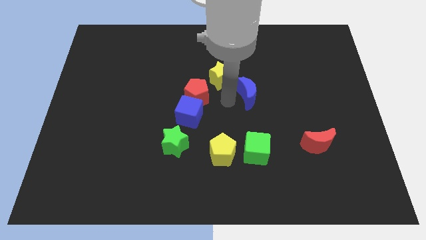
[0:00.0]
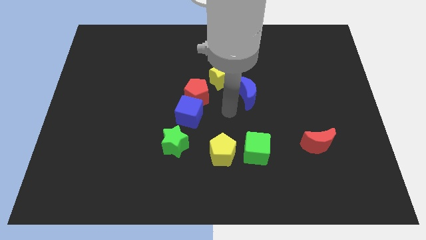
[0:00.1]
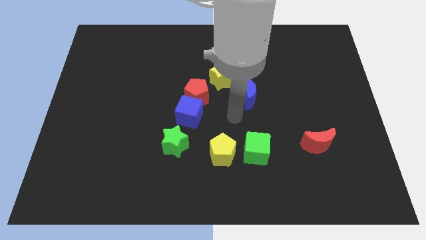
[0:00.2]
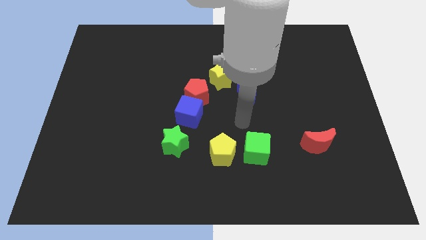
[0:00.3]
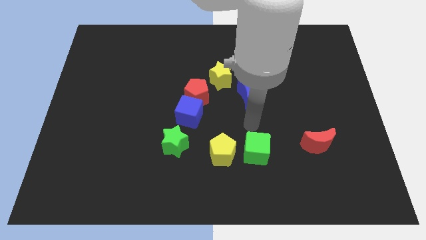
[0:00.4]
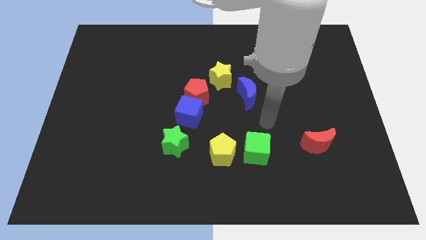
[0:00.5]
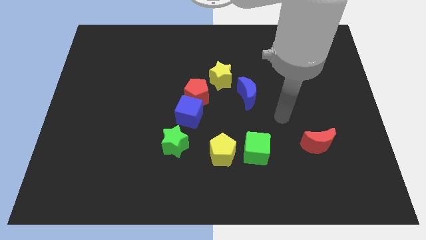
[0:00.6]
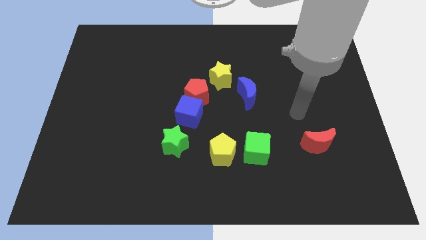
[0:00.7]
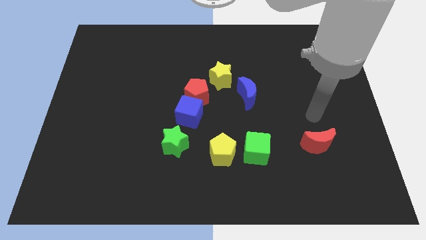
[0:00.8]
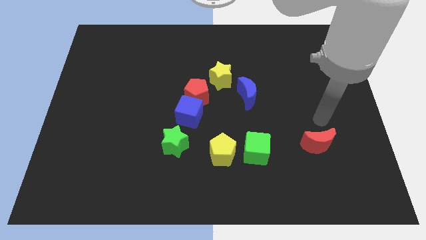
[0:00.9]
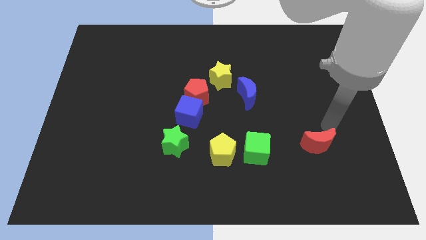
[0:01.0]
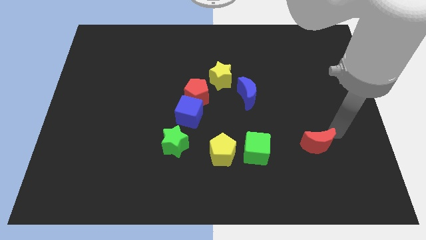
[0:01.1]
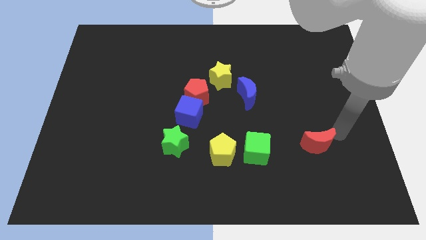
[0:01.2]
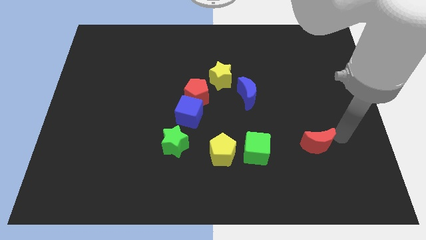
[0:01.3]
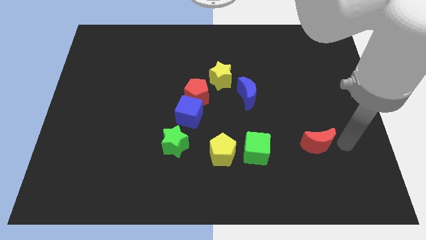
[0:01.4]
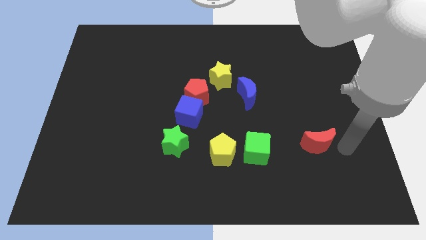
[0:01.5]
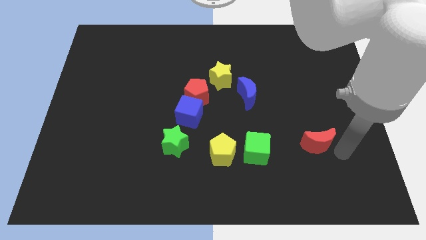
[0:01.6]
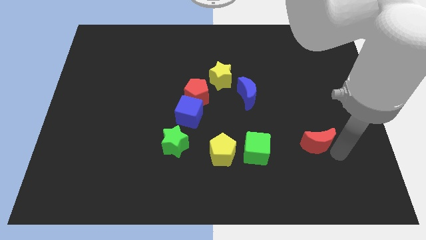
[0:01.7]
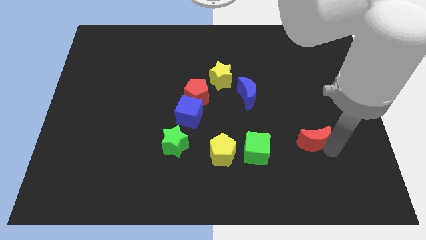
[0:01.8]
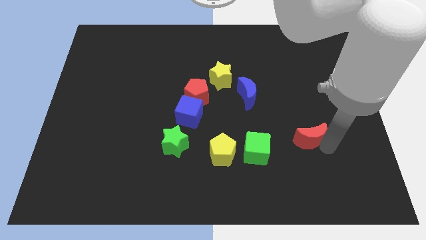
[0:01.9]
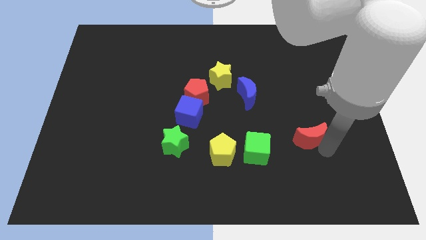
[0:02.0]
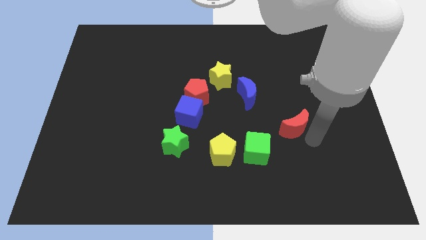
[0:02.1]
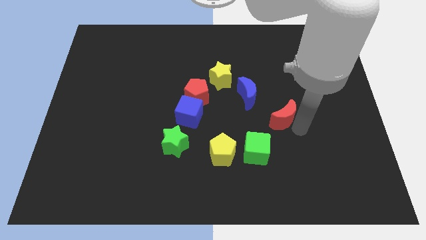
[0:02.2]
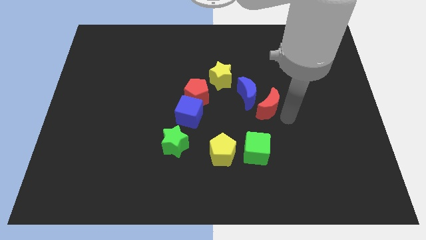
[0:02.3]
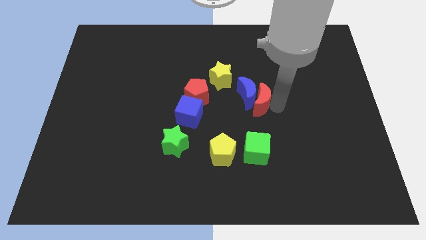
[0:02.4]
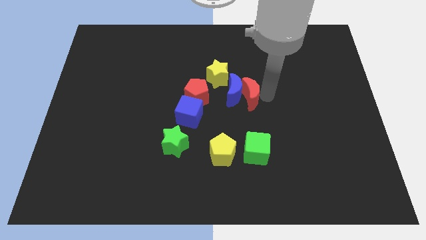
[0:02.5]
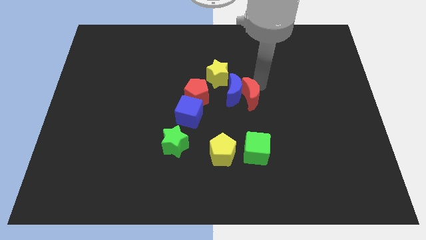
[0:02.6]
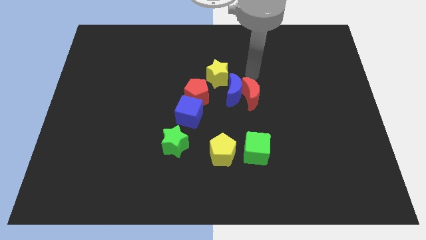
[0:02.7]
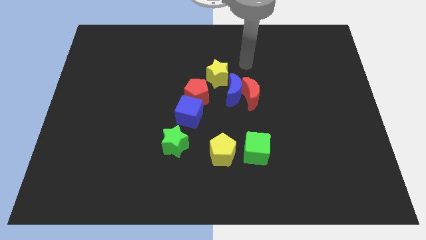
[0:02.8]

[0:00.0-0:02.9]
move the red crescent into the right side of the blue crescent

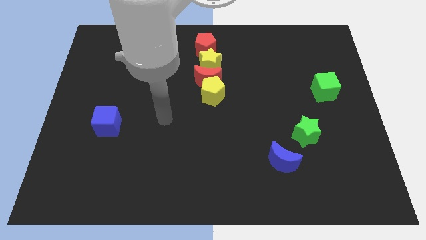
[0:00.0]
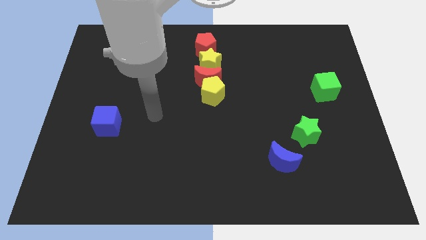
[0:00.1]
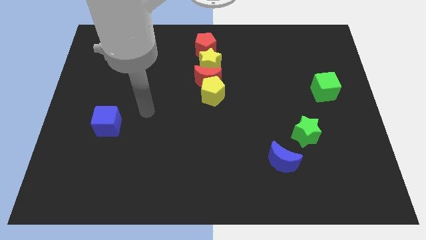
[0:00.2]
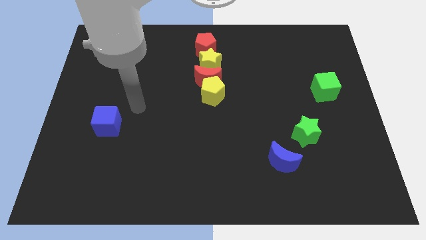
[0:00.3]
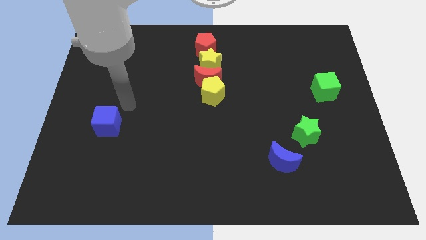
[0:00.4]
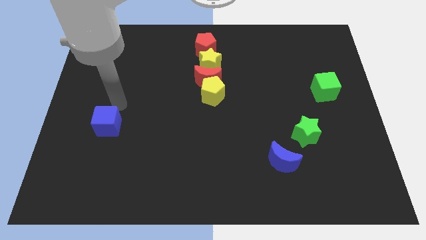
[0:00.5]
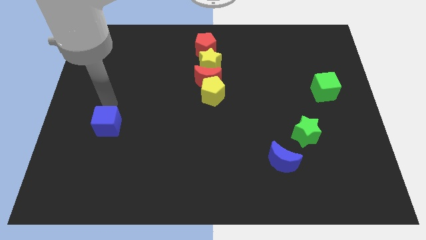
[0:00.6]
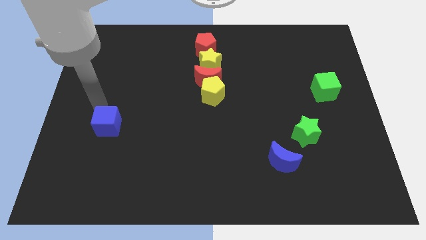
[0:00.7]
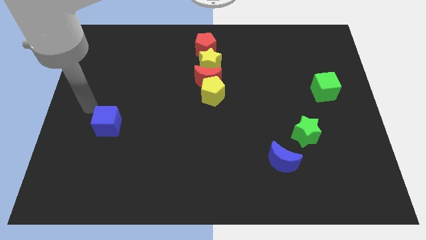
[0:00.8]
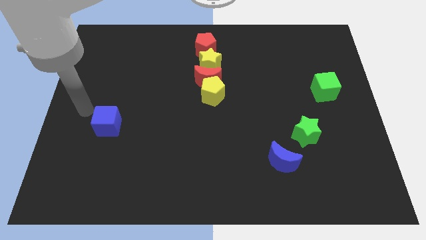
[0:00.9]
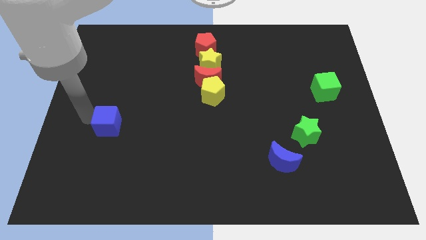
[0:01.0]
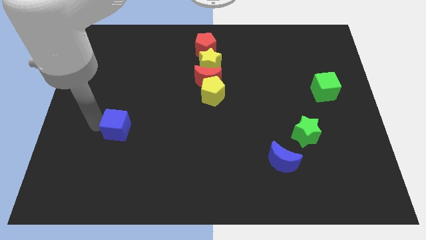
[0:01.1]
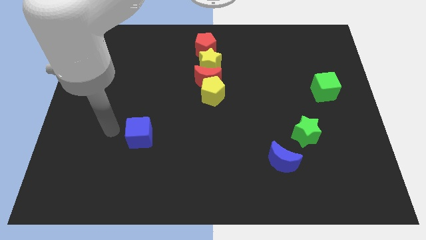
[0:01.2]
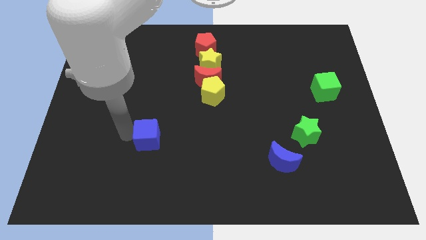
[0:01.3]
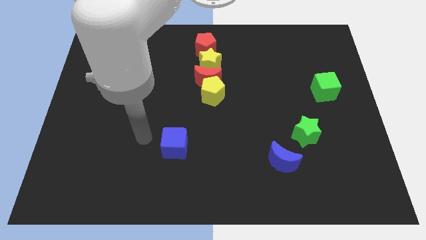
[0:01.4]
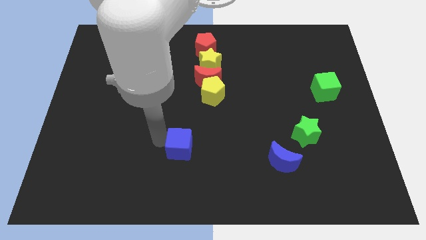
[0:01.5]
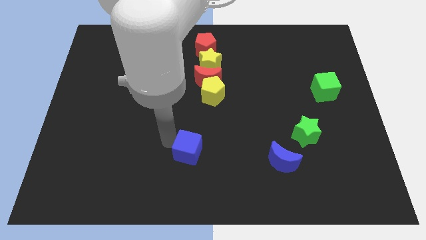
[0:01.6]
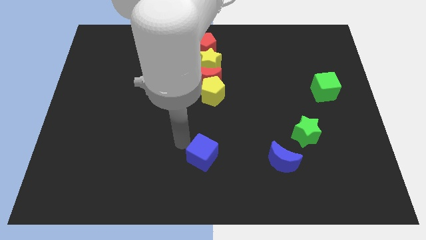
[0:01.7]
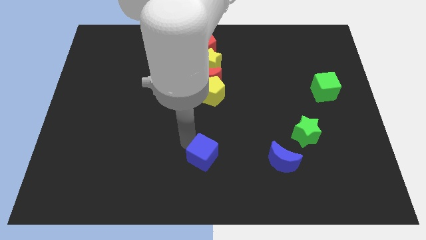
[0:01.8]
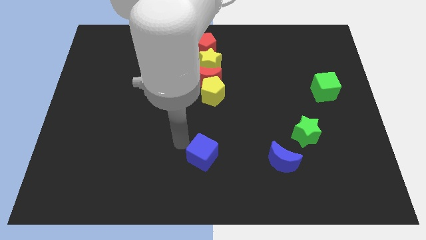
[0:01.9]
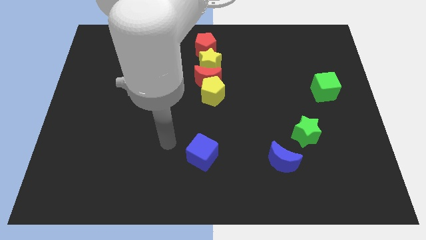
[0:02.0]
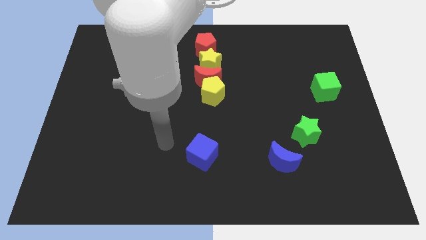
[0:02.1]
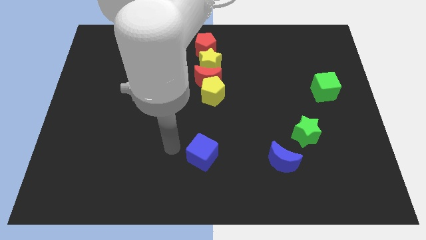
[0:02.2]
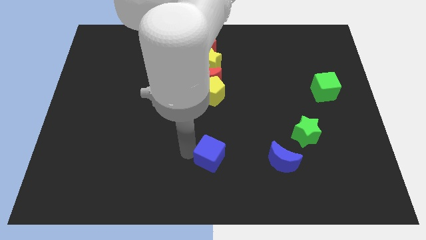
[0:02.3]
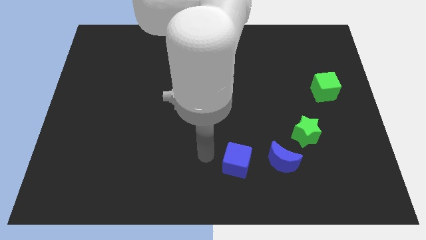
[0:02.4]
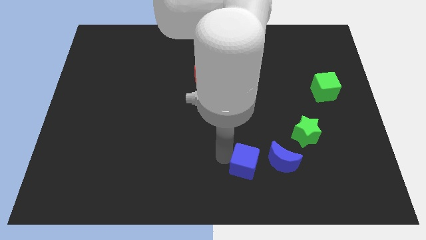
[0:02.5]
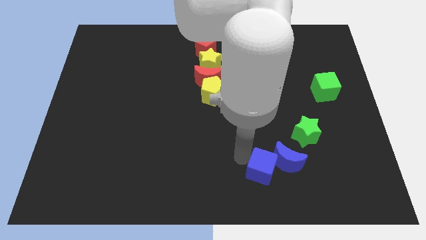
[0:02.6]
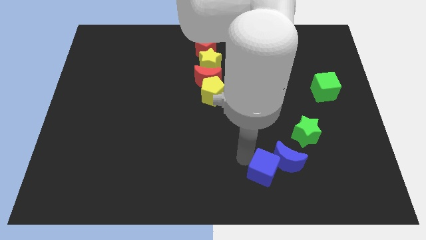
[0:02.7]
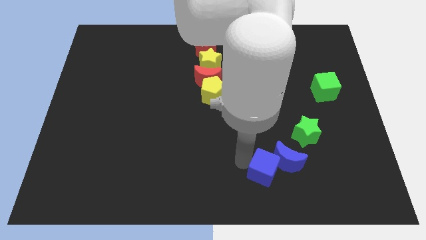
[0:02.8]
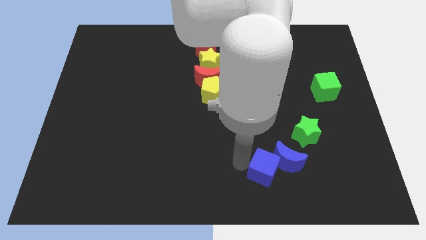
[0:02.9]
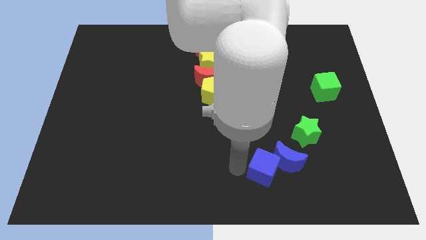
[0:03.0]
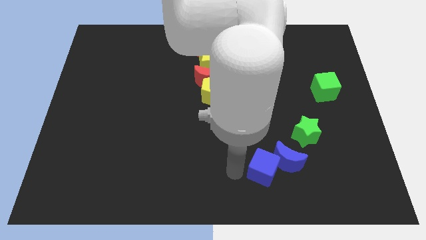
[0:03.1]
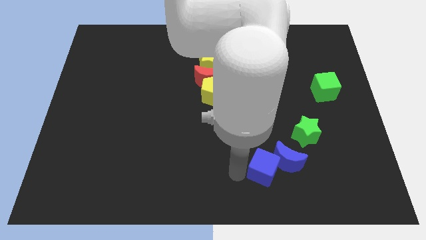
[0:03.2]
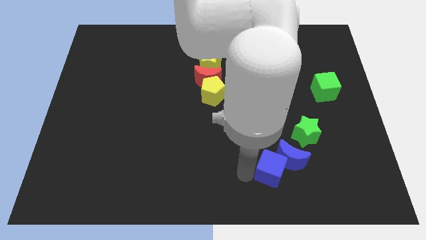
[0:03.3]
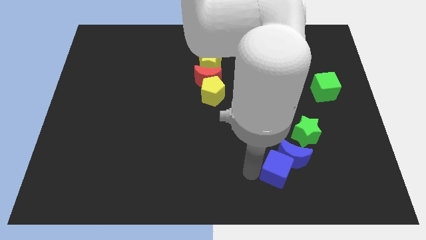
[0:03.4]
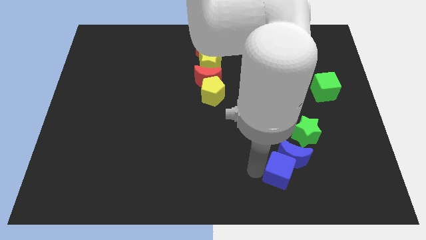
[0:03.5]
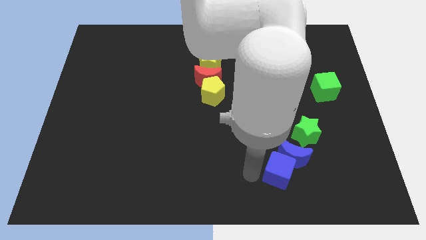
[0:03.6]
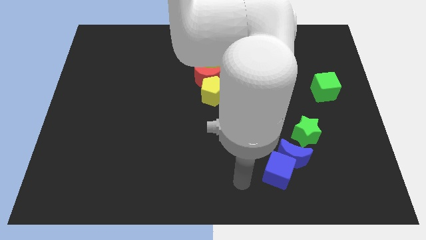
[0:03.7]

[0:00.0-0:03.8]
push the blue cube into blue moon

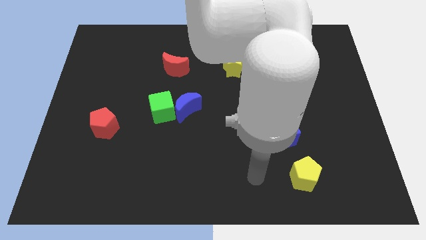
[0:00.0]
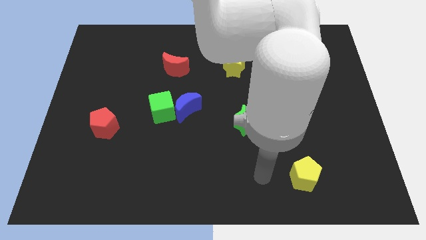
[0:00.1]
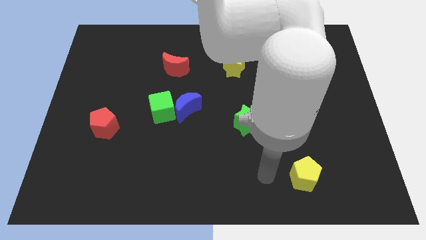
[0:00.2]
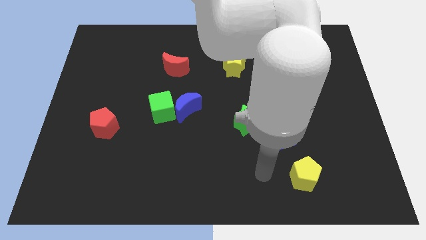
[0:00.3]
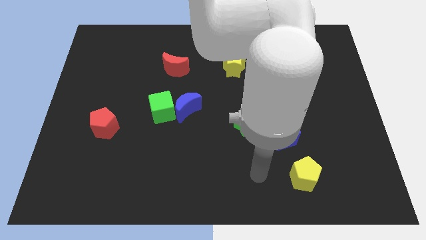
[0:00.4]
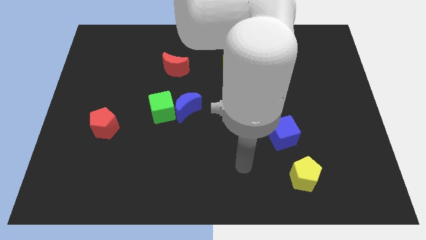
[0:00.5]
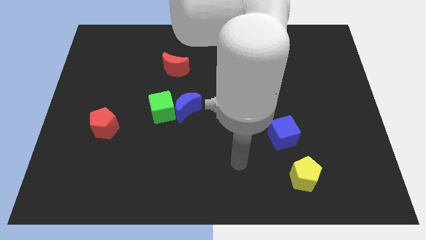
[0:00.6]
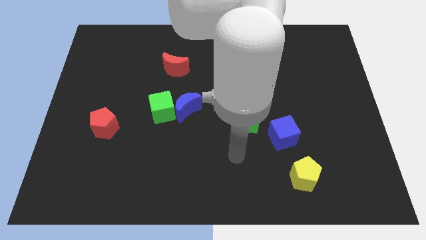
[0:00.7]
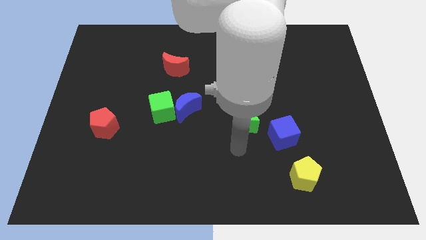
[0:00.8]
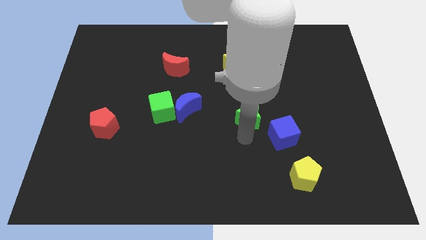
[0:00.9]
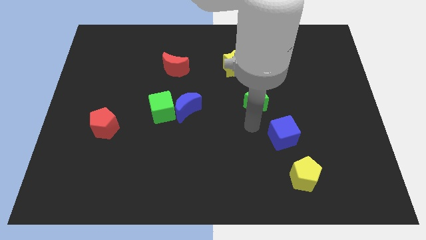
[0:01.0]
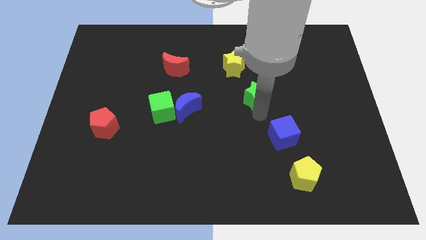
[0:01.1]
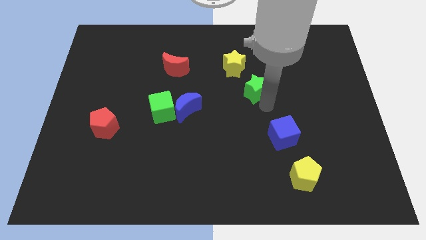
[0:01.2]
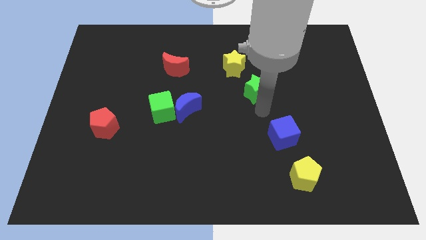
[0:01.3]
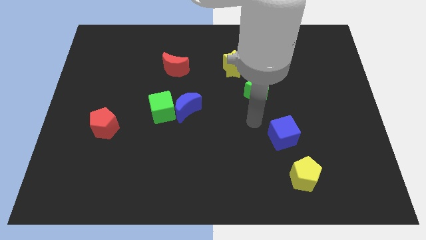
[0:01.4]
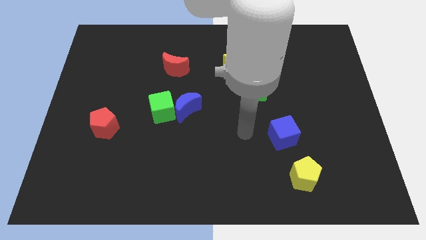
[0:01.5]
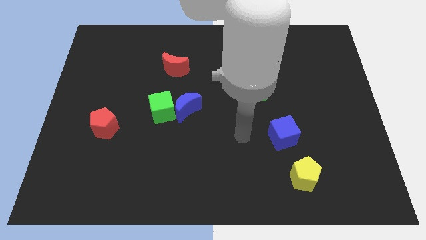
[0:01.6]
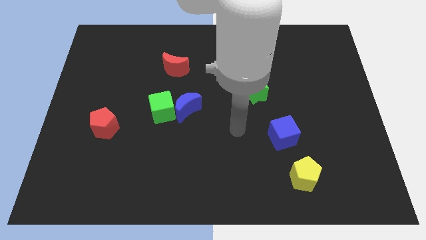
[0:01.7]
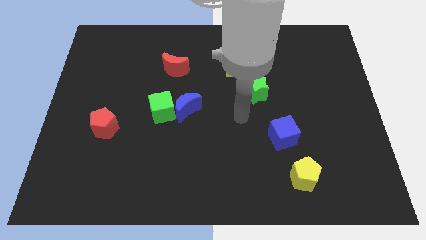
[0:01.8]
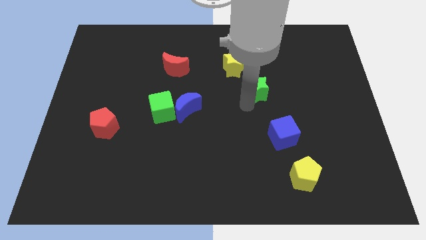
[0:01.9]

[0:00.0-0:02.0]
move the green star up slightly
